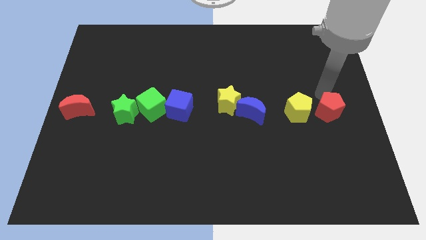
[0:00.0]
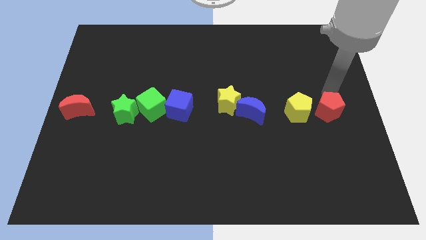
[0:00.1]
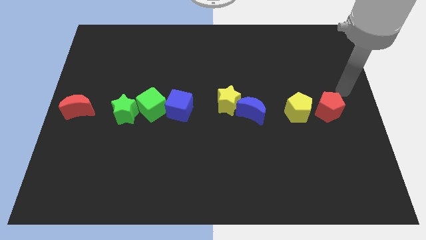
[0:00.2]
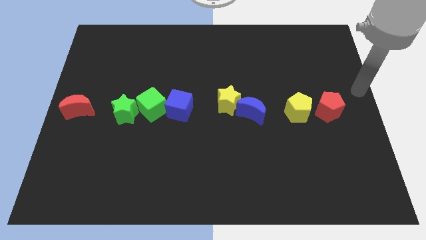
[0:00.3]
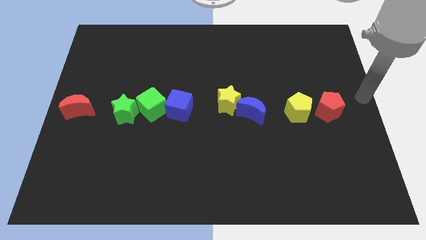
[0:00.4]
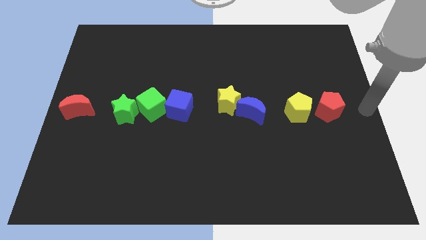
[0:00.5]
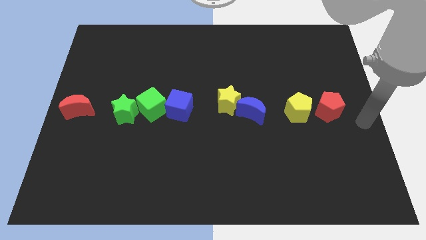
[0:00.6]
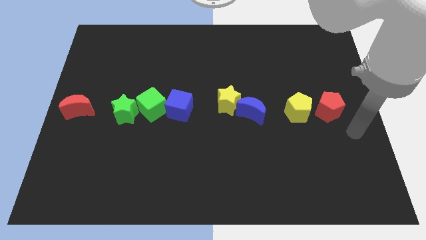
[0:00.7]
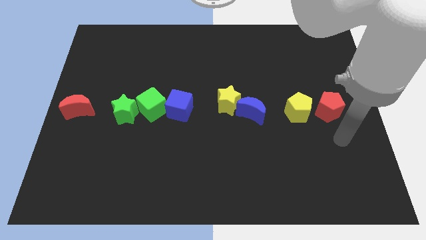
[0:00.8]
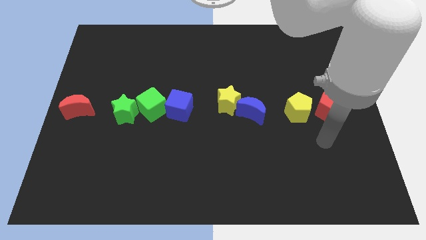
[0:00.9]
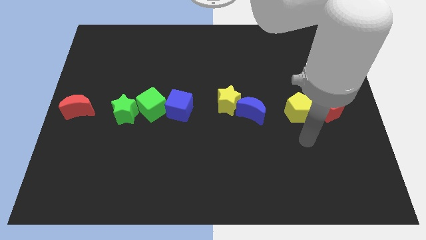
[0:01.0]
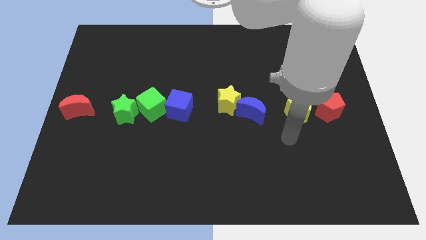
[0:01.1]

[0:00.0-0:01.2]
move your arm to the bottom of the yellow pentagon

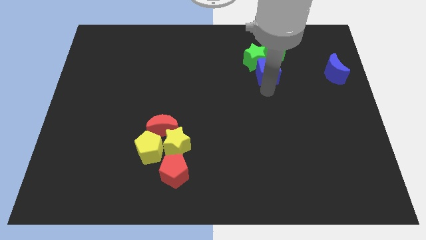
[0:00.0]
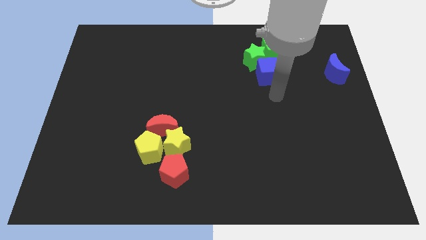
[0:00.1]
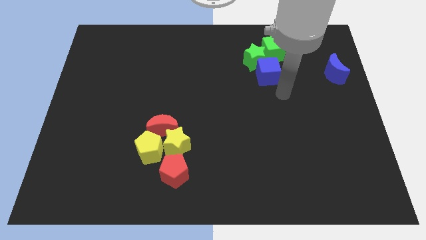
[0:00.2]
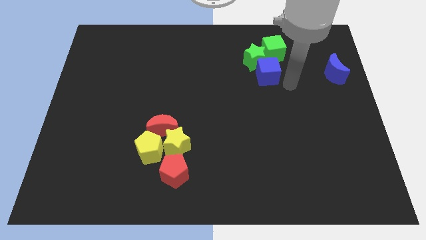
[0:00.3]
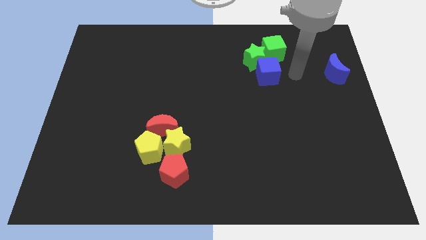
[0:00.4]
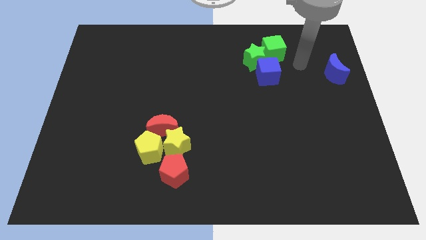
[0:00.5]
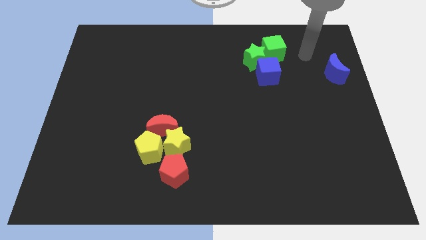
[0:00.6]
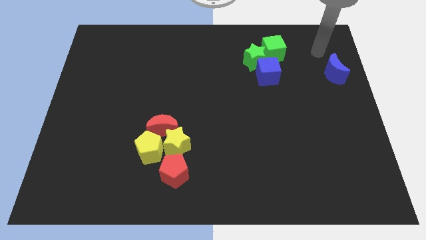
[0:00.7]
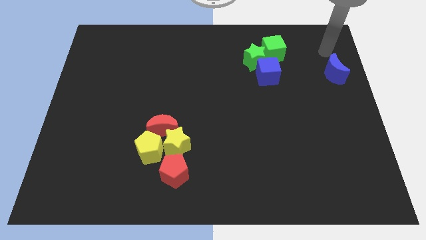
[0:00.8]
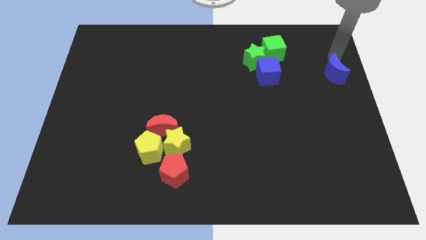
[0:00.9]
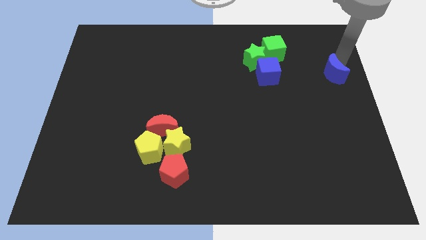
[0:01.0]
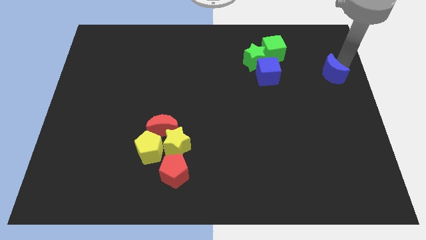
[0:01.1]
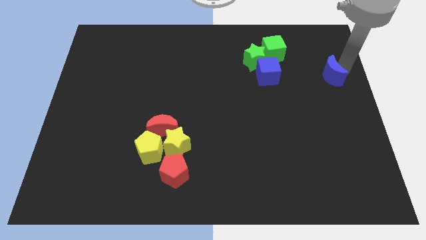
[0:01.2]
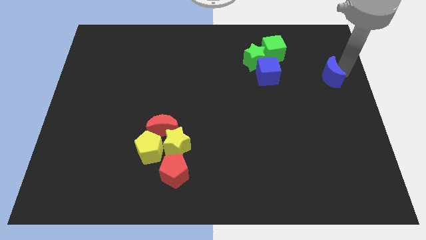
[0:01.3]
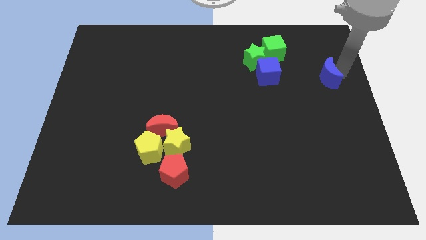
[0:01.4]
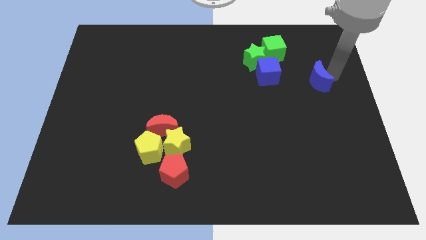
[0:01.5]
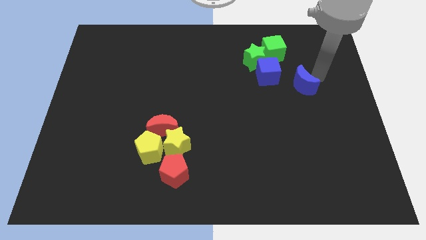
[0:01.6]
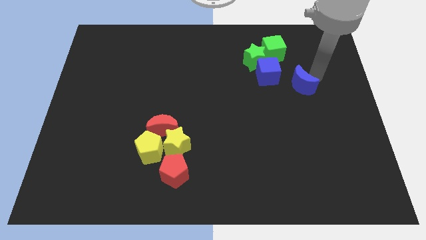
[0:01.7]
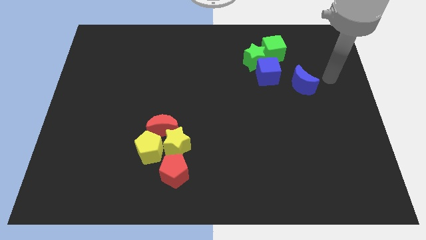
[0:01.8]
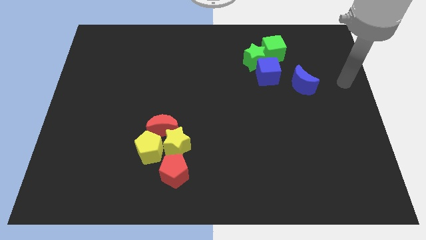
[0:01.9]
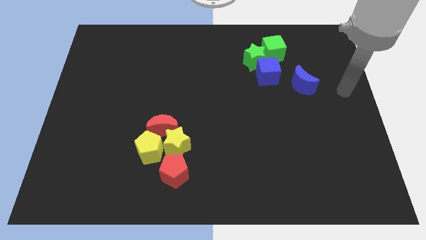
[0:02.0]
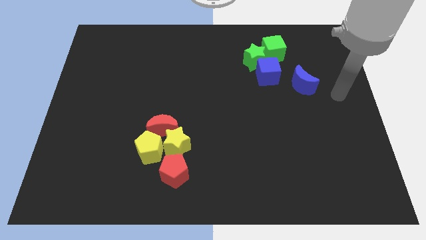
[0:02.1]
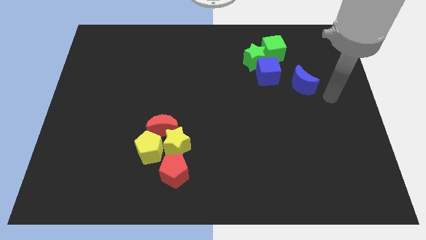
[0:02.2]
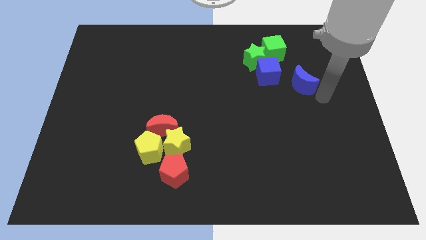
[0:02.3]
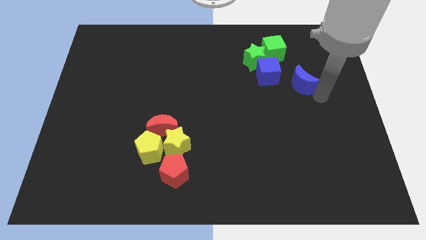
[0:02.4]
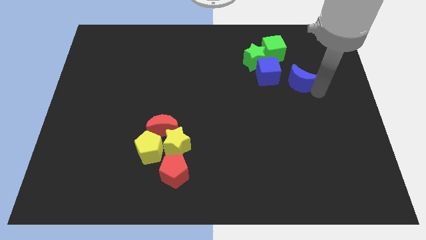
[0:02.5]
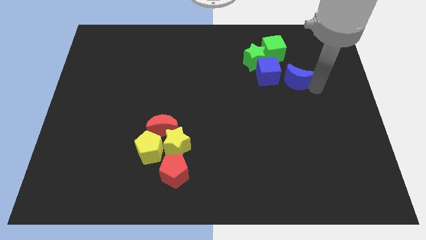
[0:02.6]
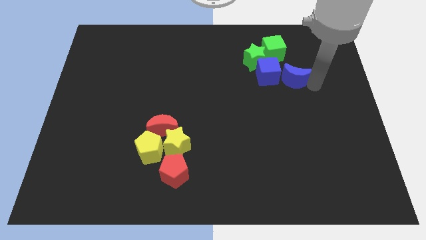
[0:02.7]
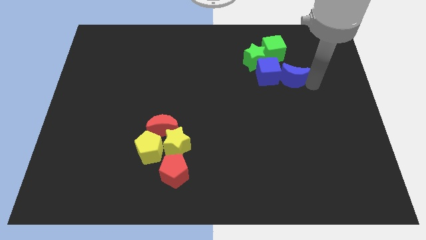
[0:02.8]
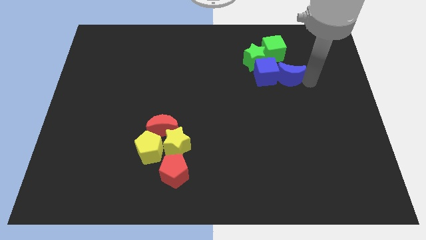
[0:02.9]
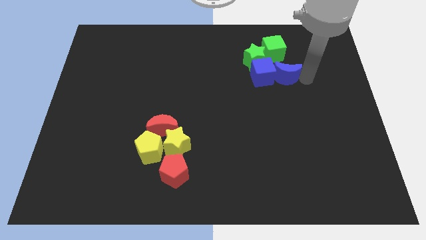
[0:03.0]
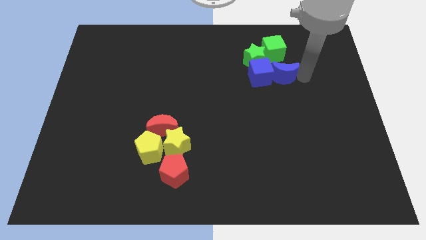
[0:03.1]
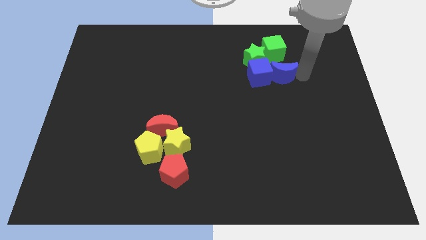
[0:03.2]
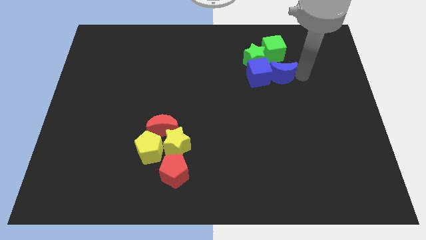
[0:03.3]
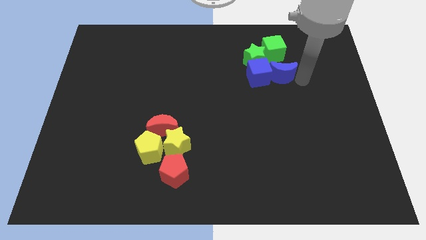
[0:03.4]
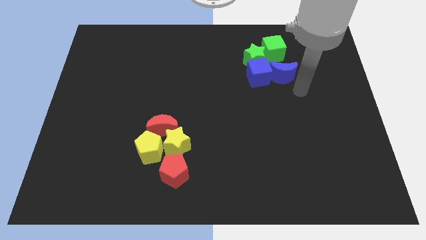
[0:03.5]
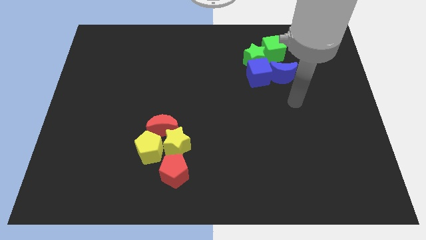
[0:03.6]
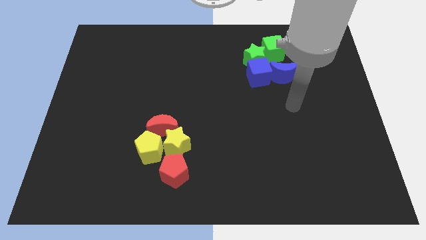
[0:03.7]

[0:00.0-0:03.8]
place the blue moon at the bottom of green cube

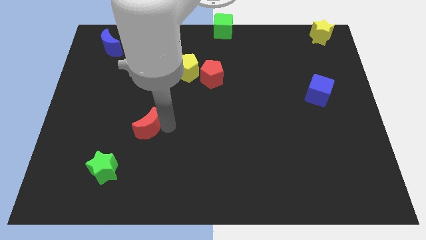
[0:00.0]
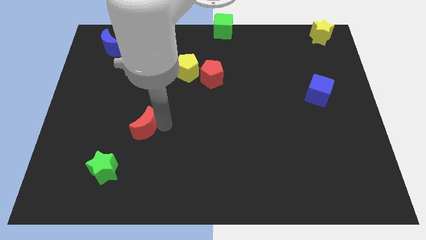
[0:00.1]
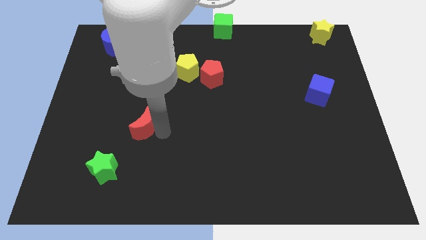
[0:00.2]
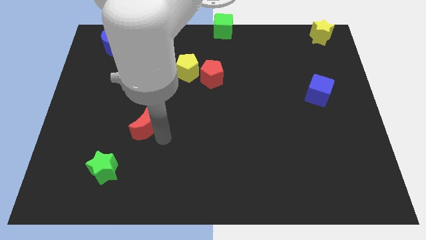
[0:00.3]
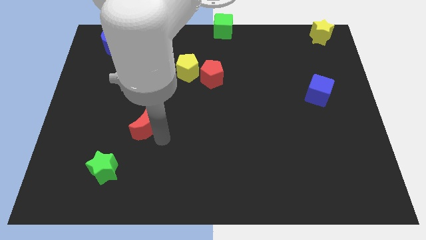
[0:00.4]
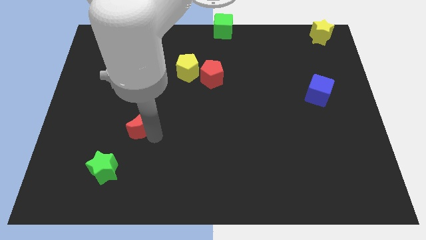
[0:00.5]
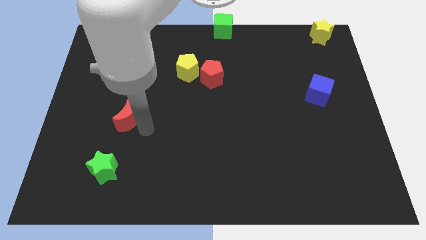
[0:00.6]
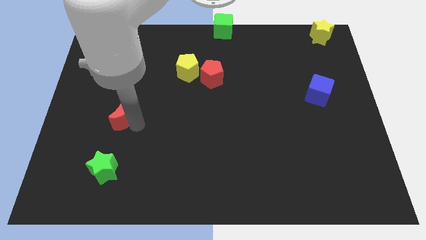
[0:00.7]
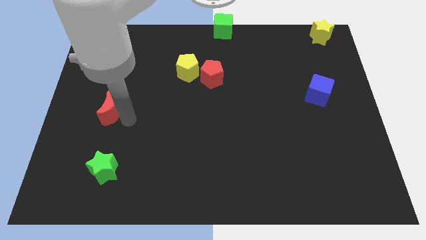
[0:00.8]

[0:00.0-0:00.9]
move the red crescent vertical to the green star

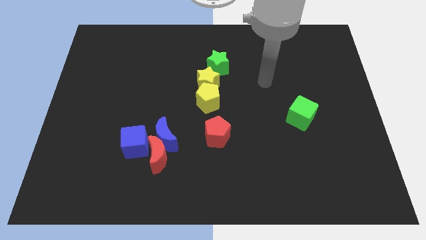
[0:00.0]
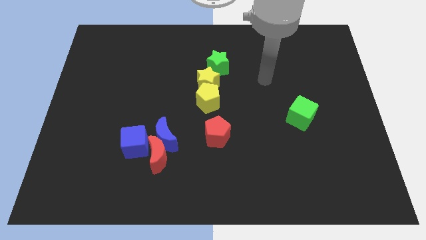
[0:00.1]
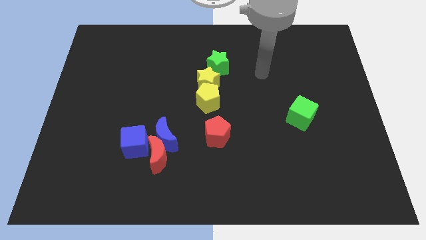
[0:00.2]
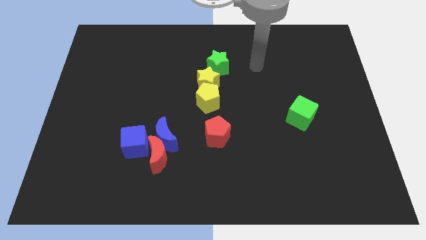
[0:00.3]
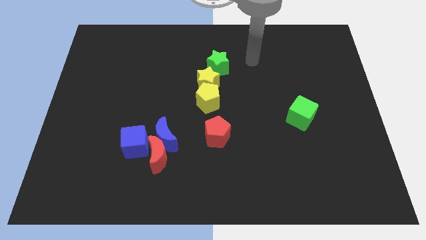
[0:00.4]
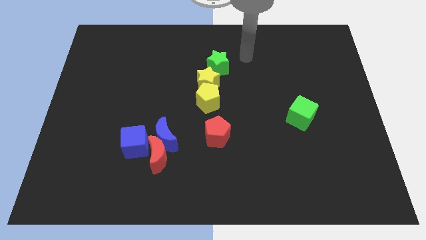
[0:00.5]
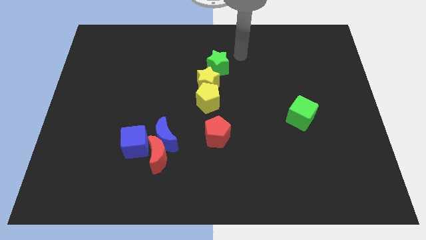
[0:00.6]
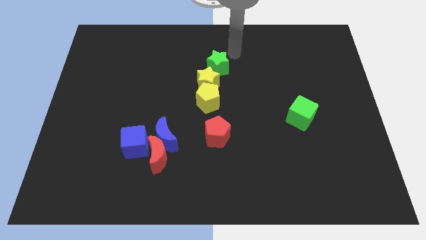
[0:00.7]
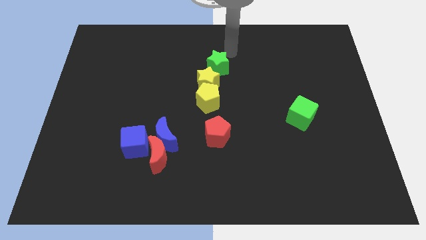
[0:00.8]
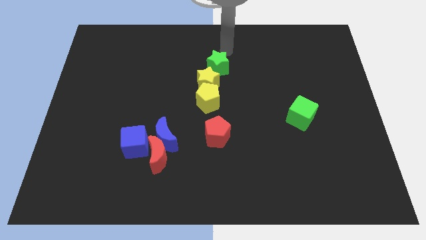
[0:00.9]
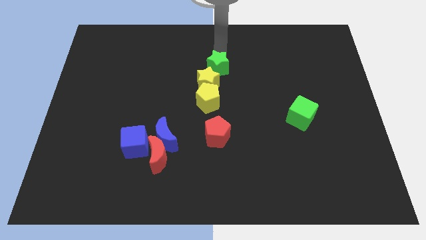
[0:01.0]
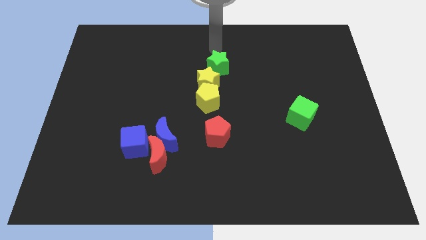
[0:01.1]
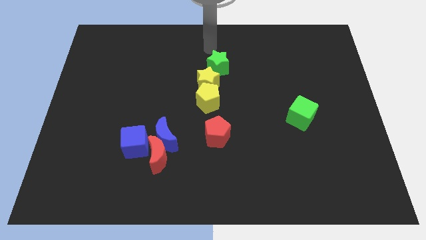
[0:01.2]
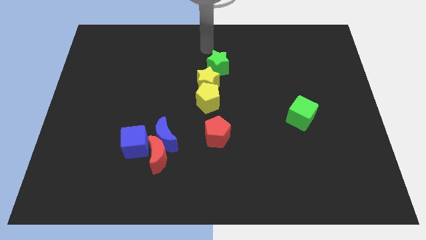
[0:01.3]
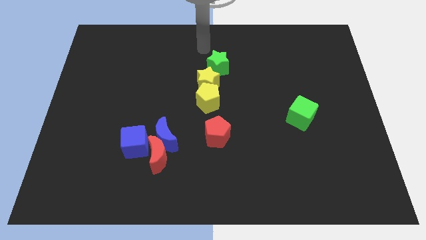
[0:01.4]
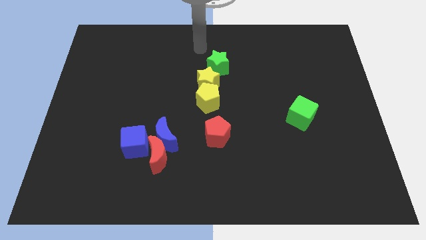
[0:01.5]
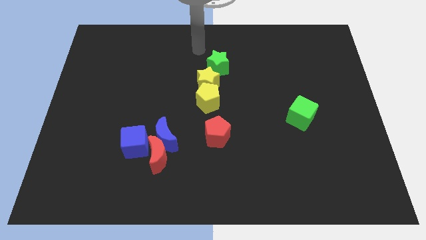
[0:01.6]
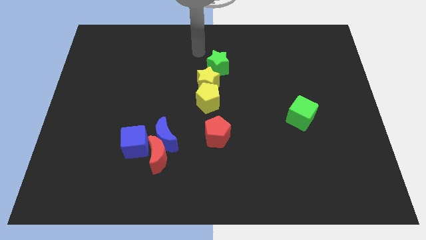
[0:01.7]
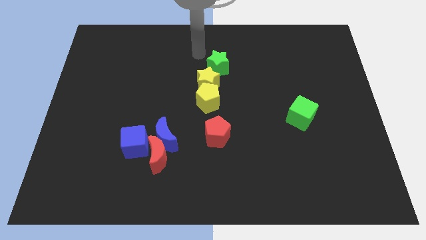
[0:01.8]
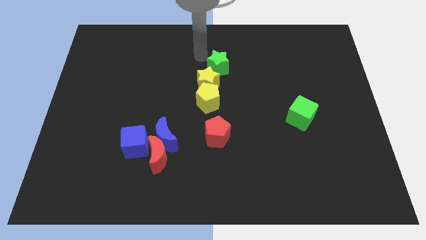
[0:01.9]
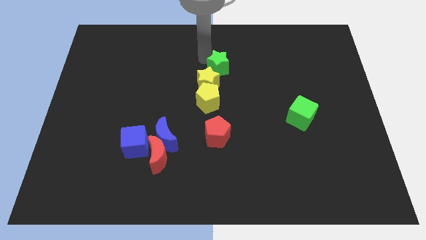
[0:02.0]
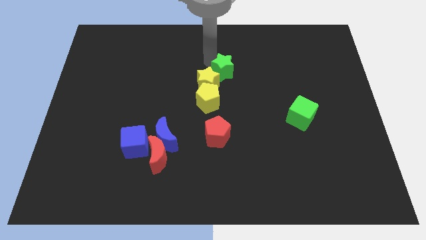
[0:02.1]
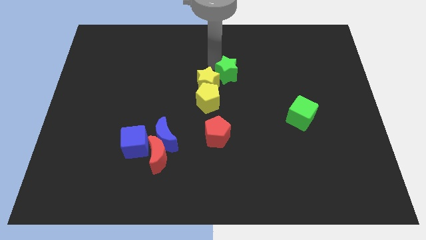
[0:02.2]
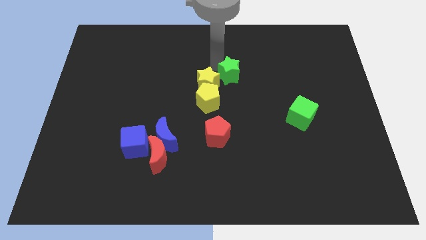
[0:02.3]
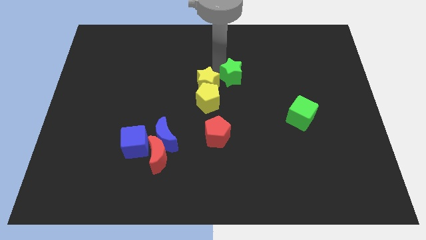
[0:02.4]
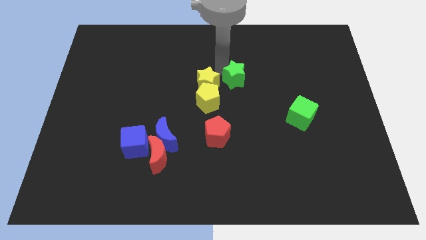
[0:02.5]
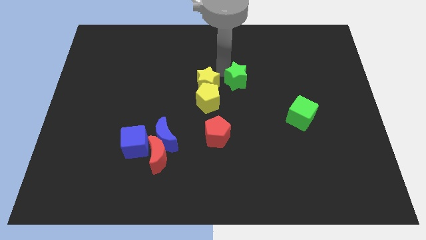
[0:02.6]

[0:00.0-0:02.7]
move the green star towards the bottom right of the board

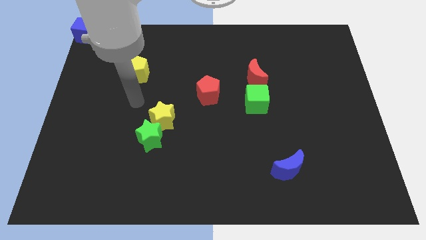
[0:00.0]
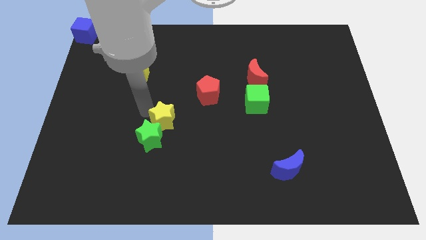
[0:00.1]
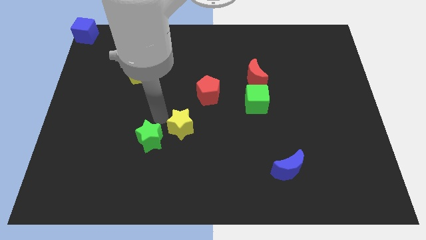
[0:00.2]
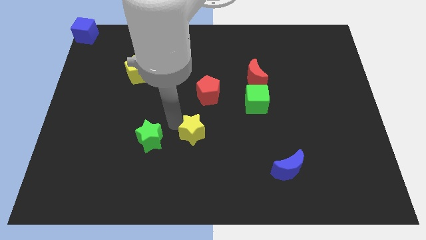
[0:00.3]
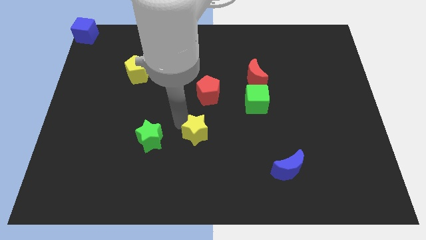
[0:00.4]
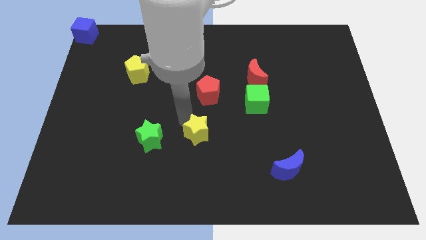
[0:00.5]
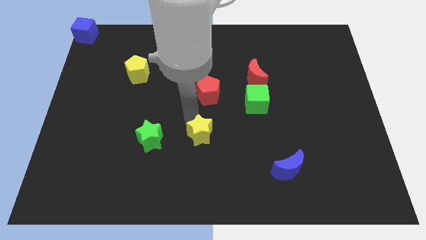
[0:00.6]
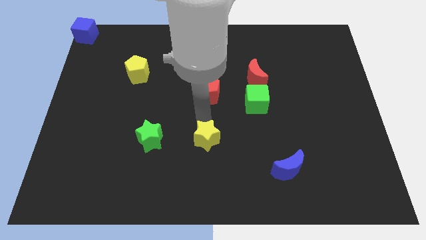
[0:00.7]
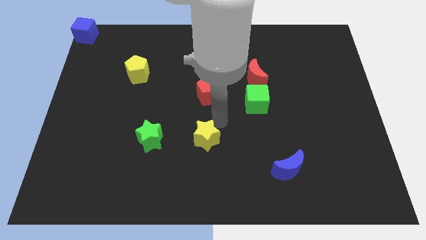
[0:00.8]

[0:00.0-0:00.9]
separate the stars
